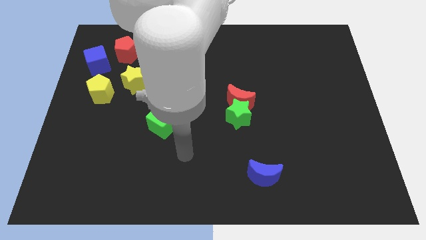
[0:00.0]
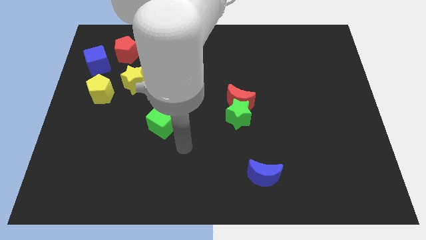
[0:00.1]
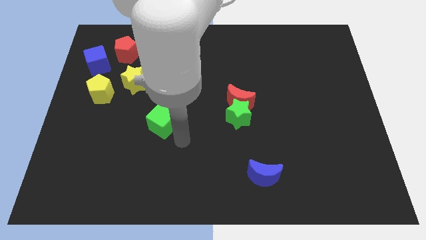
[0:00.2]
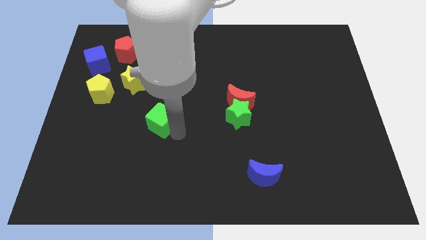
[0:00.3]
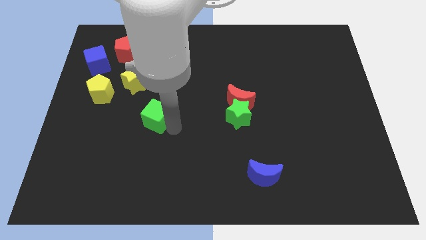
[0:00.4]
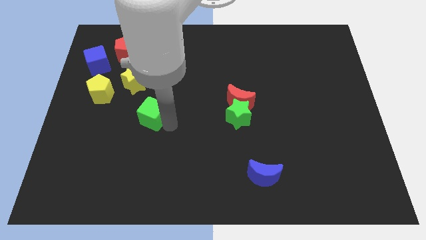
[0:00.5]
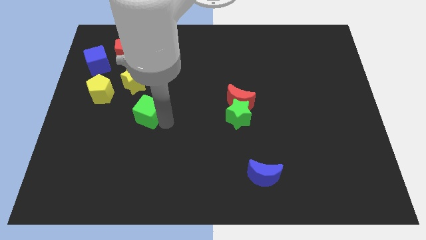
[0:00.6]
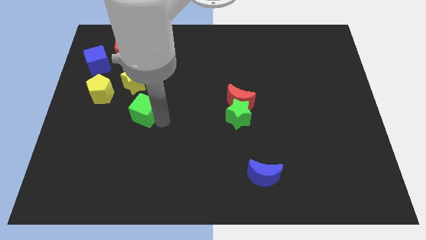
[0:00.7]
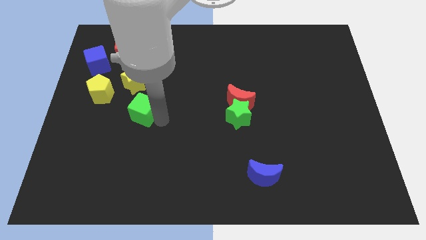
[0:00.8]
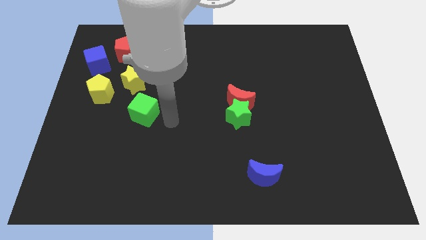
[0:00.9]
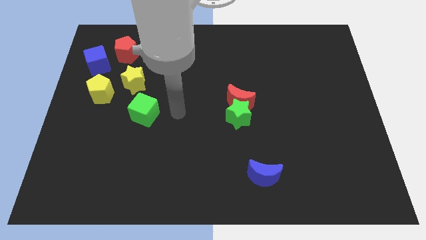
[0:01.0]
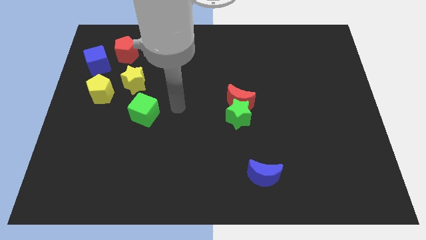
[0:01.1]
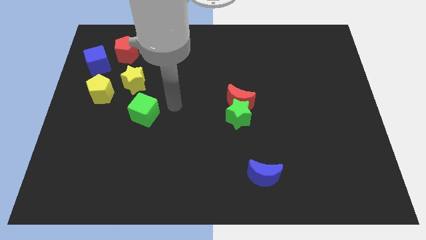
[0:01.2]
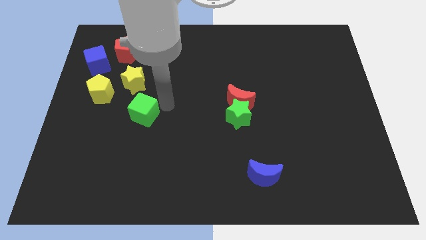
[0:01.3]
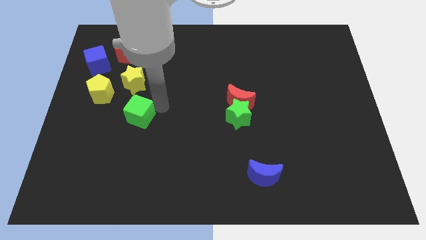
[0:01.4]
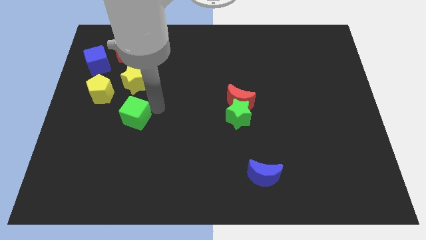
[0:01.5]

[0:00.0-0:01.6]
move the green cube below the yellow star

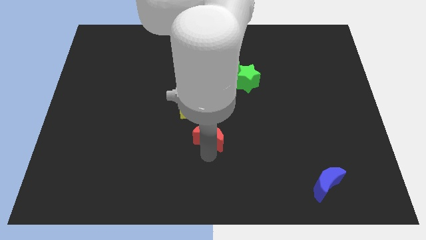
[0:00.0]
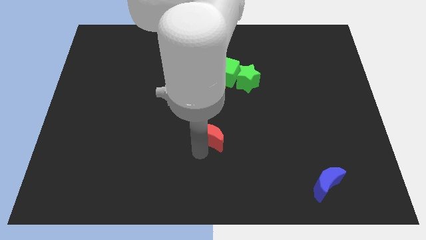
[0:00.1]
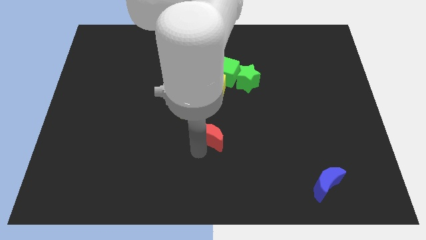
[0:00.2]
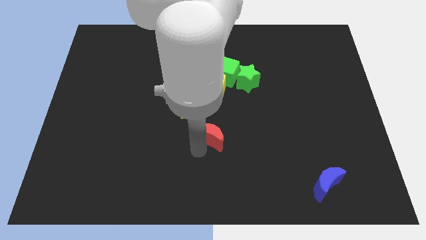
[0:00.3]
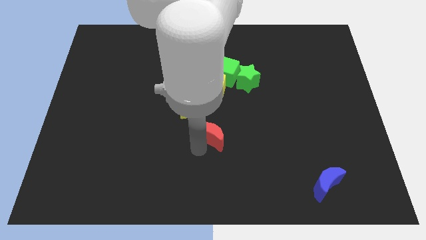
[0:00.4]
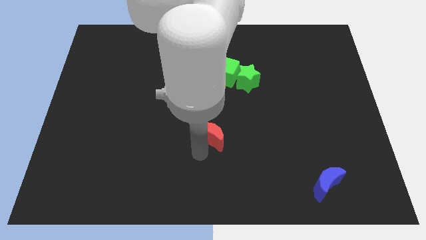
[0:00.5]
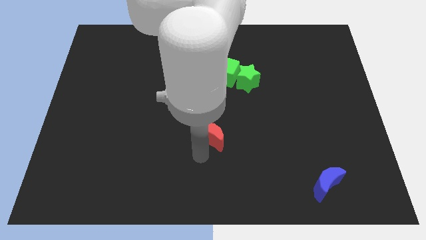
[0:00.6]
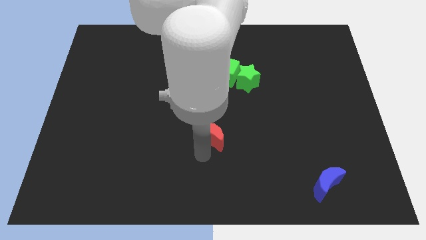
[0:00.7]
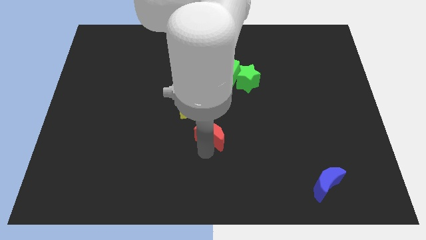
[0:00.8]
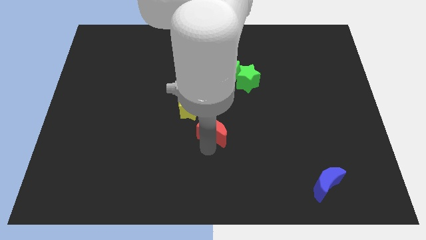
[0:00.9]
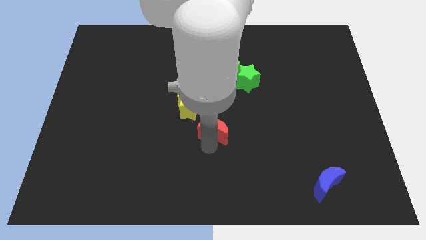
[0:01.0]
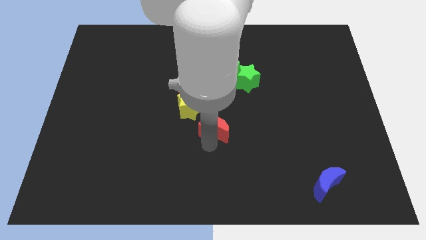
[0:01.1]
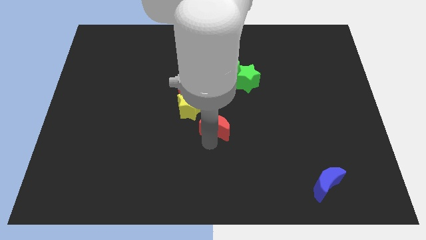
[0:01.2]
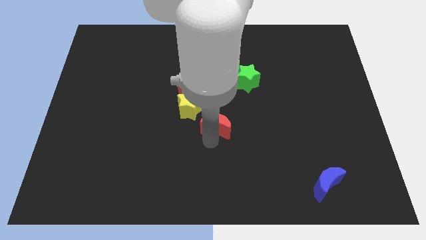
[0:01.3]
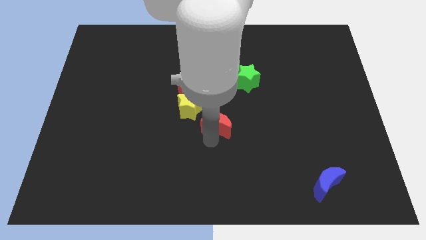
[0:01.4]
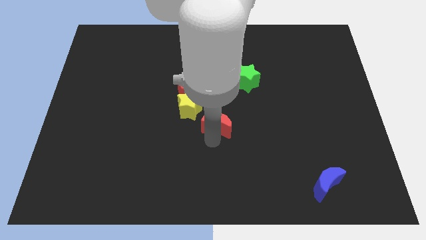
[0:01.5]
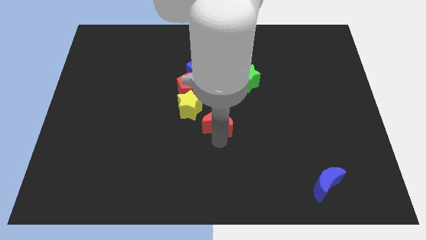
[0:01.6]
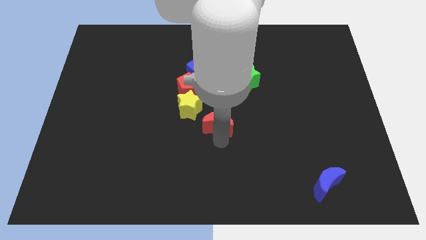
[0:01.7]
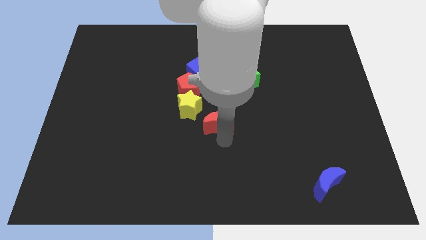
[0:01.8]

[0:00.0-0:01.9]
place the red crescent at the bottom right side of the yellow star

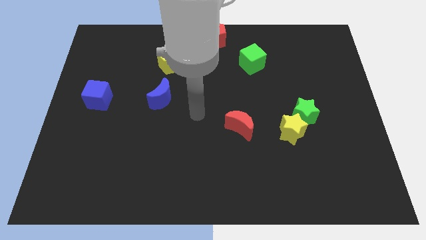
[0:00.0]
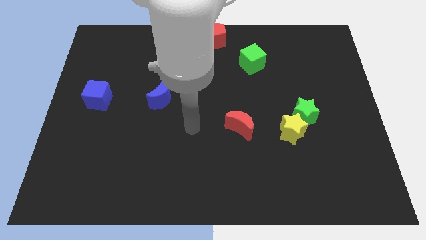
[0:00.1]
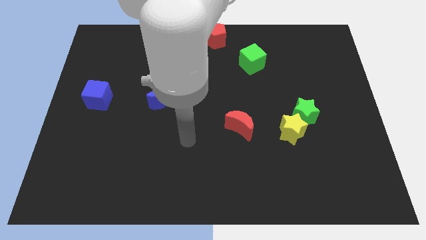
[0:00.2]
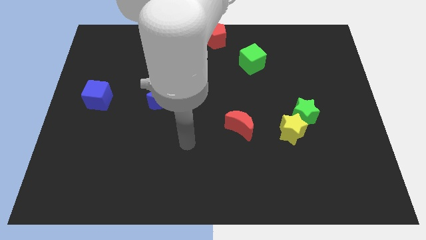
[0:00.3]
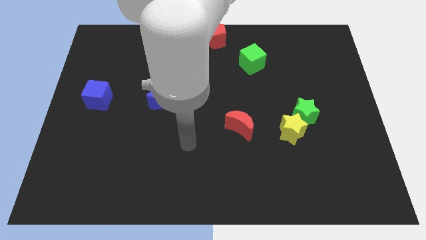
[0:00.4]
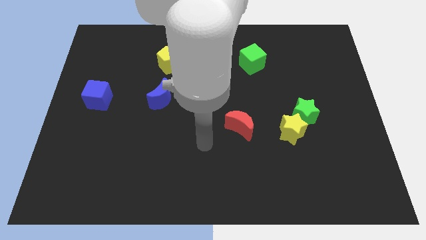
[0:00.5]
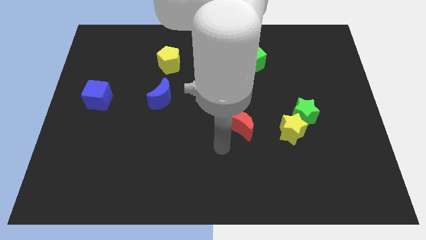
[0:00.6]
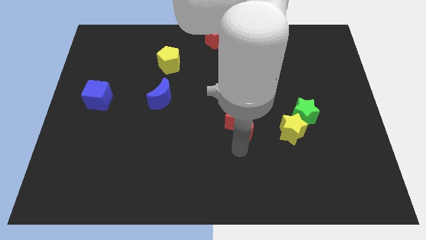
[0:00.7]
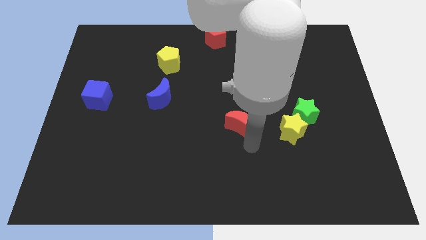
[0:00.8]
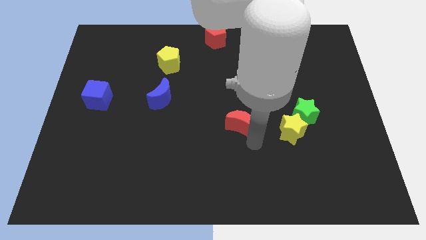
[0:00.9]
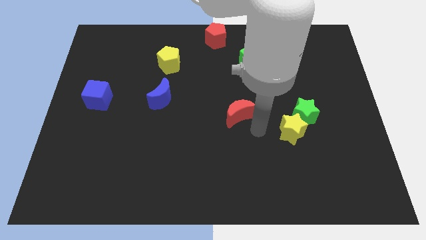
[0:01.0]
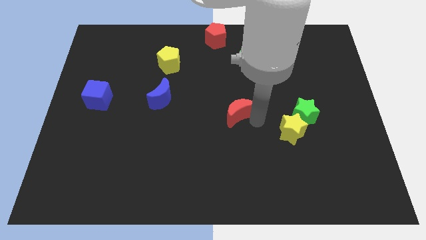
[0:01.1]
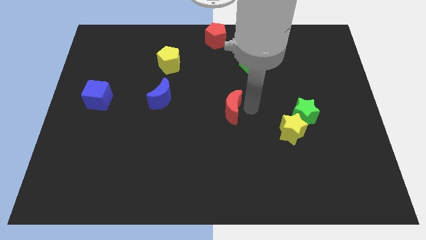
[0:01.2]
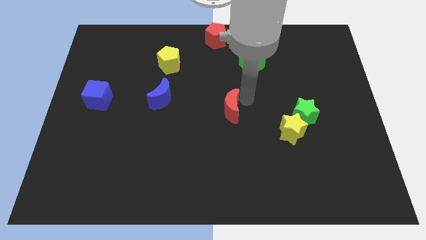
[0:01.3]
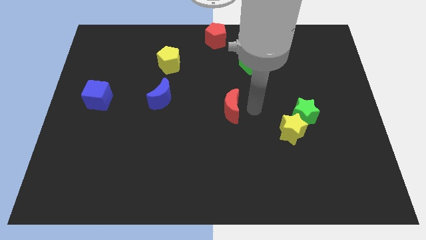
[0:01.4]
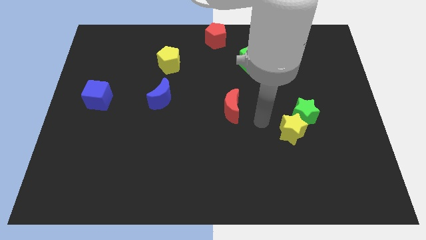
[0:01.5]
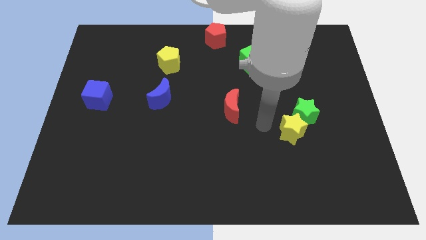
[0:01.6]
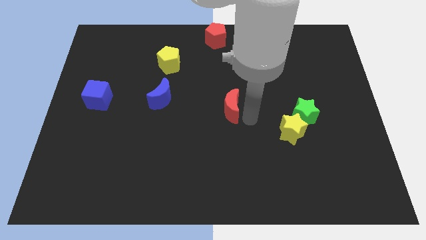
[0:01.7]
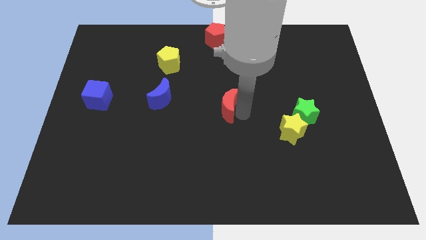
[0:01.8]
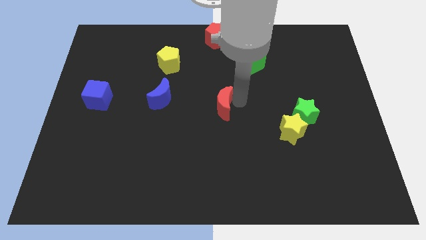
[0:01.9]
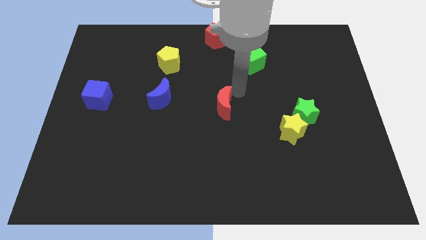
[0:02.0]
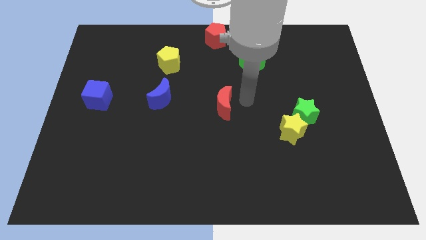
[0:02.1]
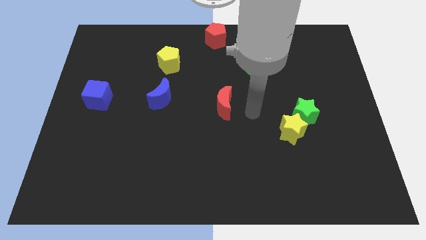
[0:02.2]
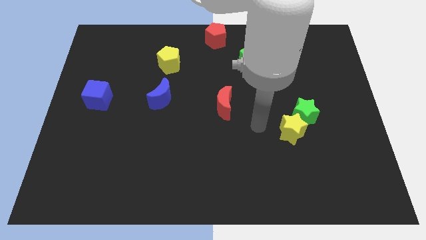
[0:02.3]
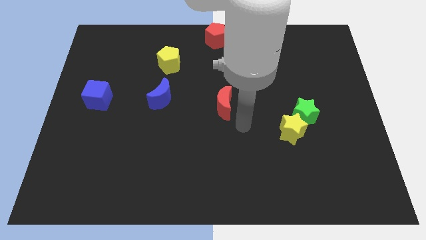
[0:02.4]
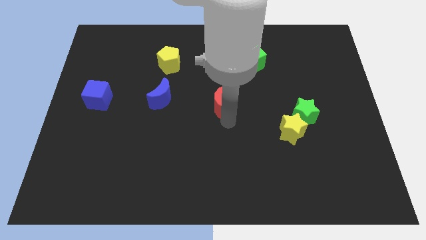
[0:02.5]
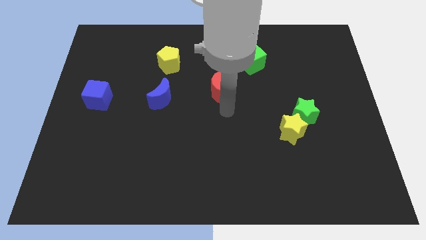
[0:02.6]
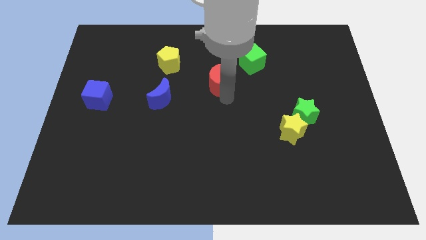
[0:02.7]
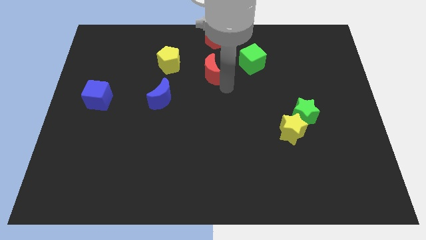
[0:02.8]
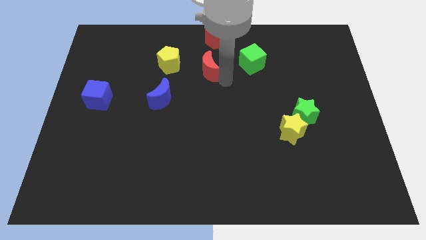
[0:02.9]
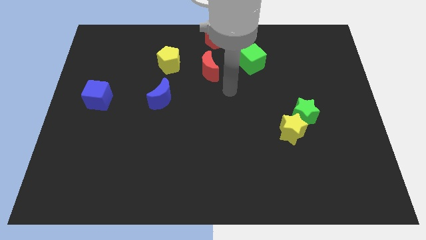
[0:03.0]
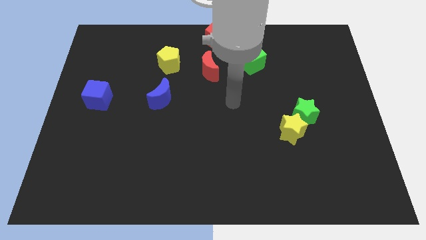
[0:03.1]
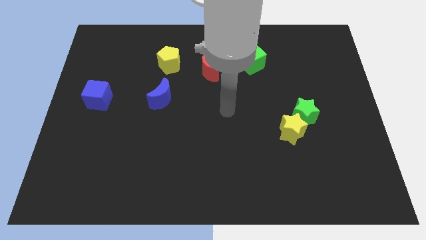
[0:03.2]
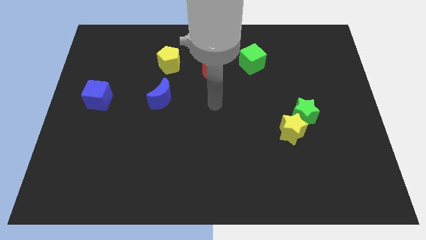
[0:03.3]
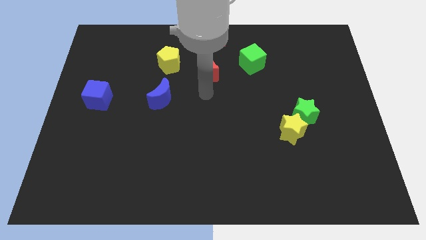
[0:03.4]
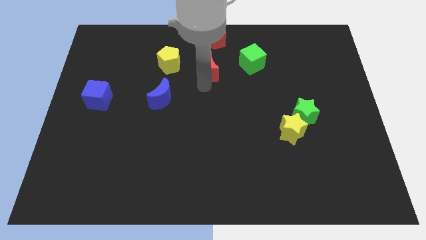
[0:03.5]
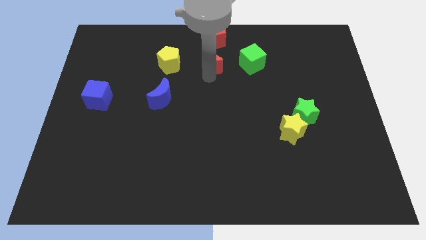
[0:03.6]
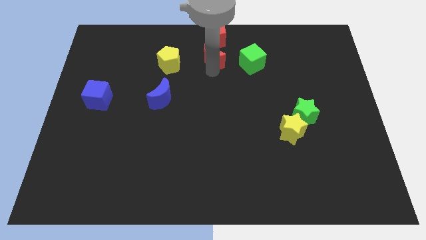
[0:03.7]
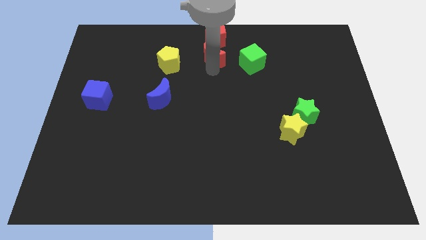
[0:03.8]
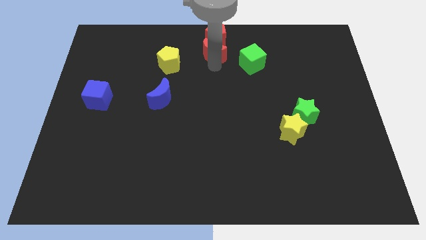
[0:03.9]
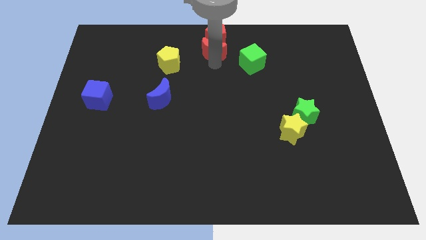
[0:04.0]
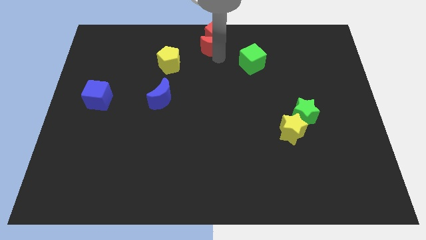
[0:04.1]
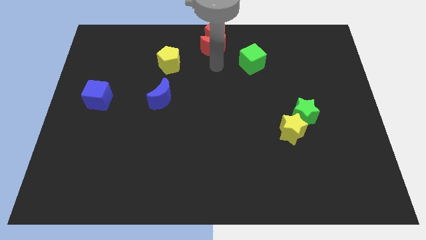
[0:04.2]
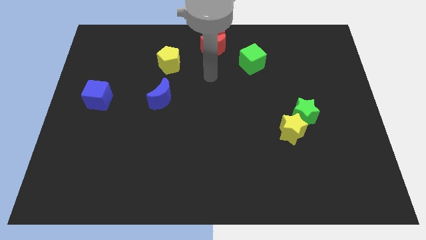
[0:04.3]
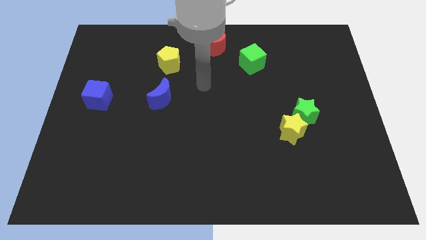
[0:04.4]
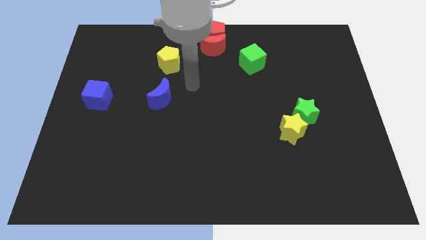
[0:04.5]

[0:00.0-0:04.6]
move the red crescent to the bottom of the red pentagon

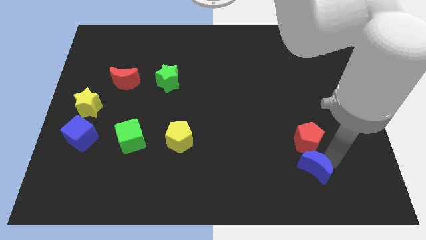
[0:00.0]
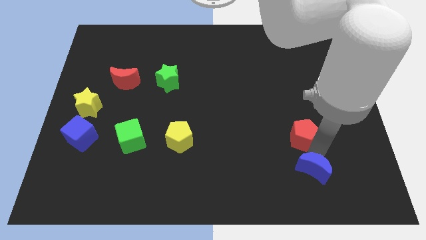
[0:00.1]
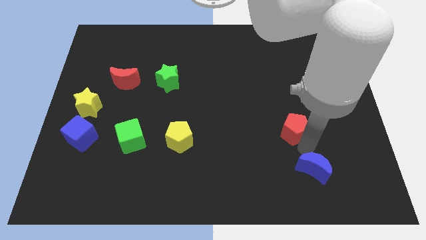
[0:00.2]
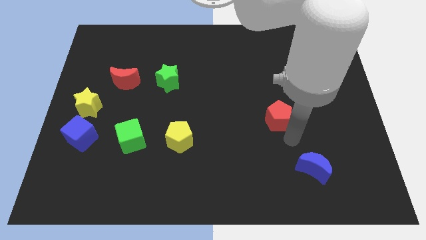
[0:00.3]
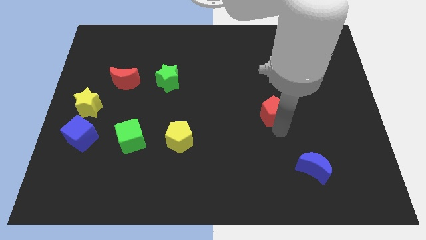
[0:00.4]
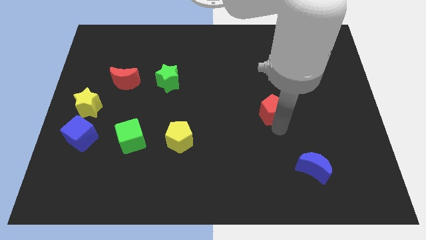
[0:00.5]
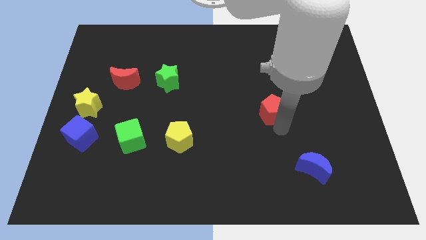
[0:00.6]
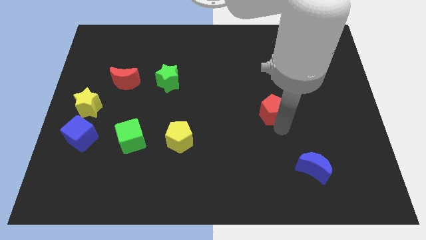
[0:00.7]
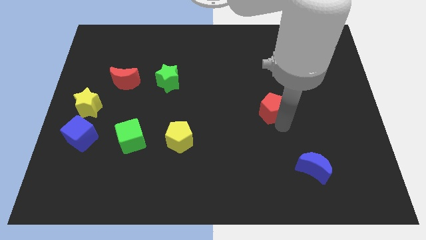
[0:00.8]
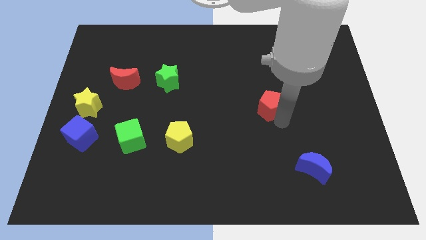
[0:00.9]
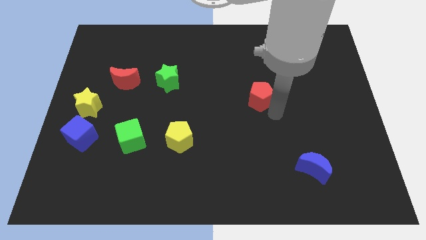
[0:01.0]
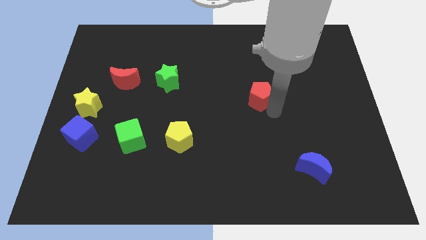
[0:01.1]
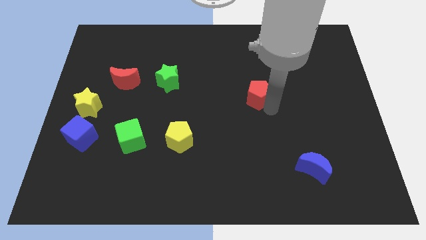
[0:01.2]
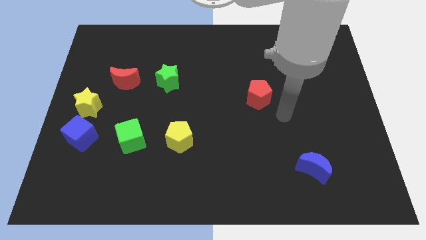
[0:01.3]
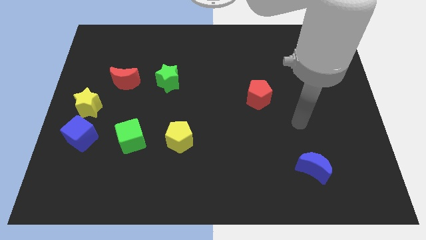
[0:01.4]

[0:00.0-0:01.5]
slide the red pentagon to the center of the board
